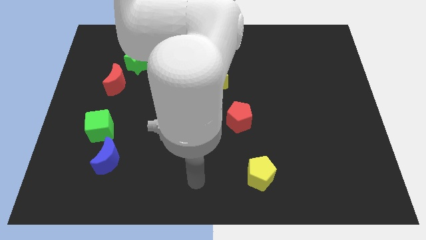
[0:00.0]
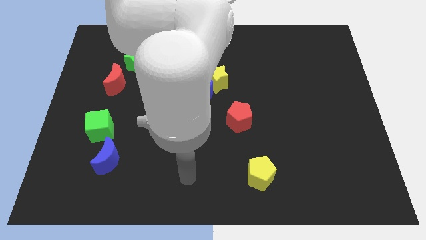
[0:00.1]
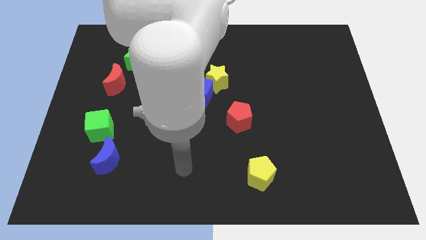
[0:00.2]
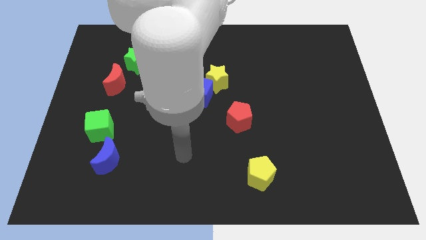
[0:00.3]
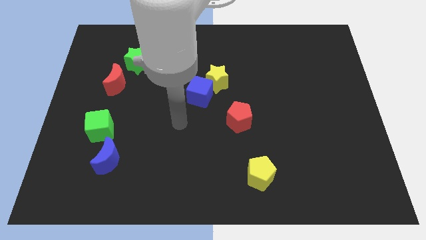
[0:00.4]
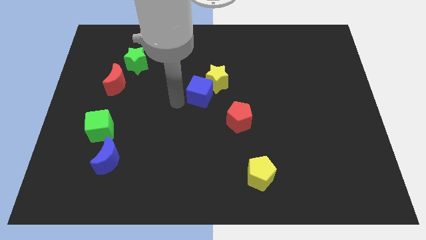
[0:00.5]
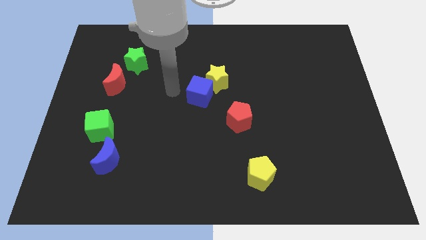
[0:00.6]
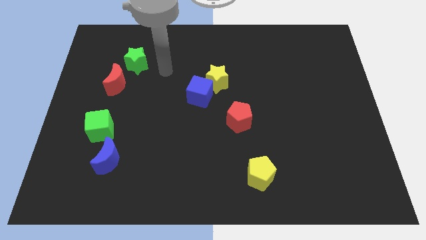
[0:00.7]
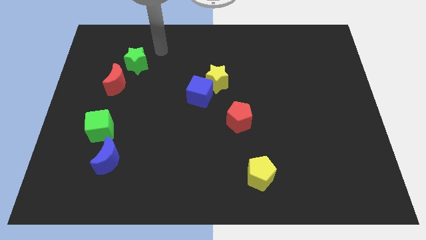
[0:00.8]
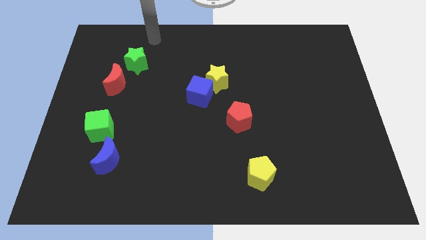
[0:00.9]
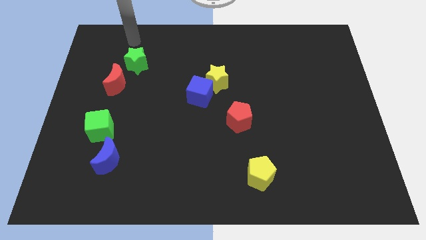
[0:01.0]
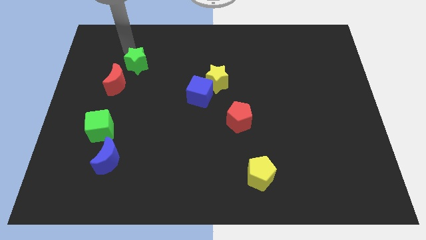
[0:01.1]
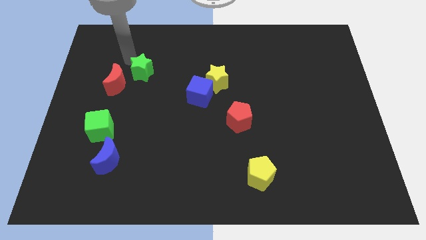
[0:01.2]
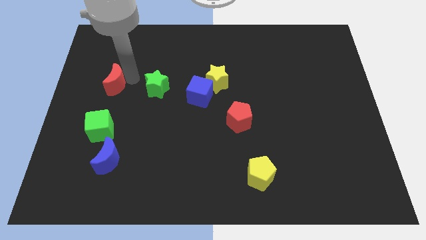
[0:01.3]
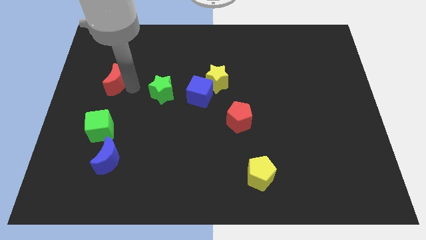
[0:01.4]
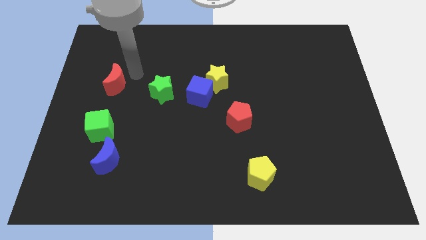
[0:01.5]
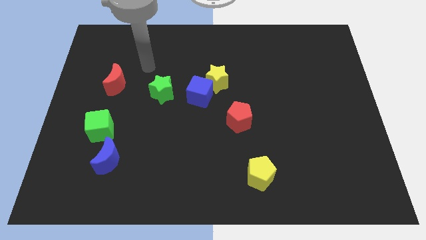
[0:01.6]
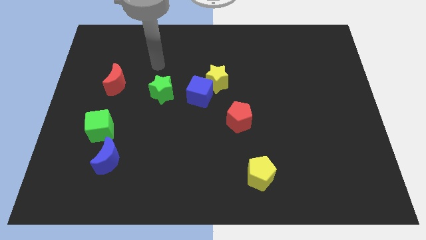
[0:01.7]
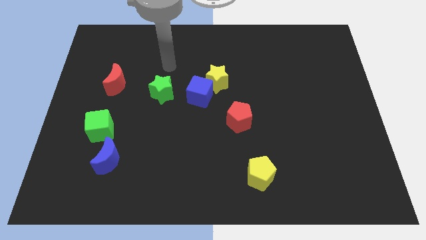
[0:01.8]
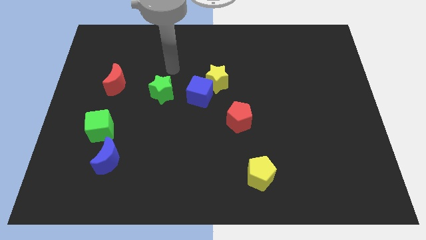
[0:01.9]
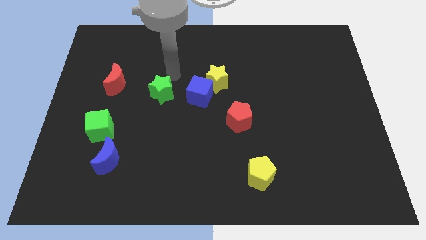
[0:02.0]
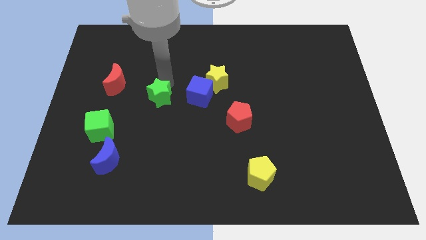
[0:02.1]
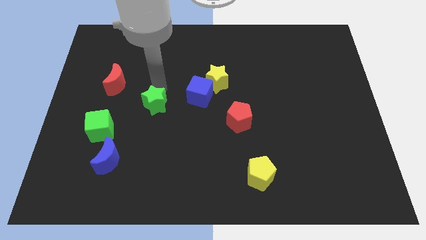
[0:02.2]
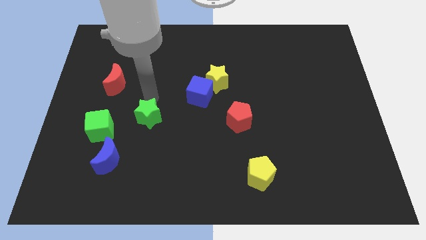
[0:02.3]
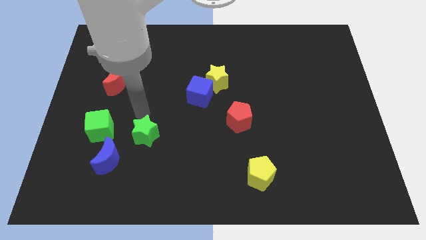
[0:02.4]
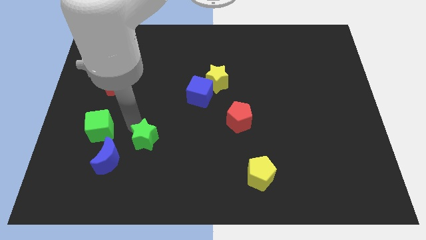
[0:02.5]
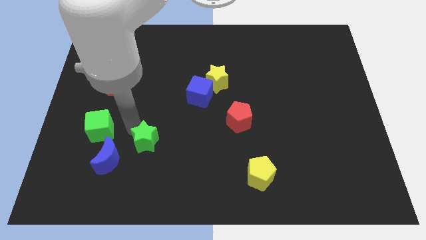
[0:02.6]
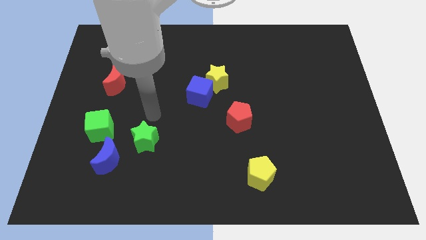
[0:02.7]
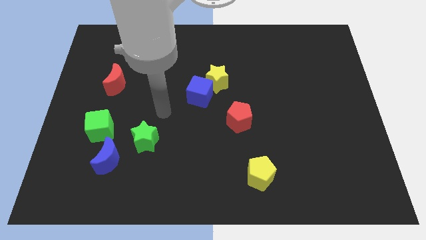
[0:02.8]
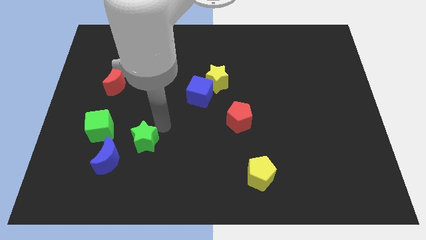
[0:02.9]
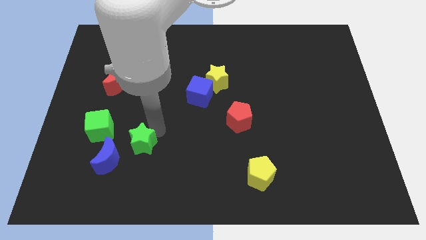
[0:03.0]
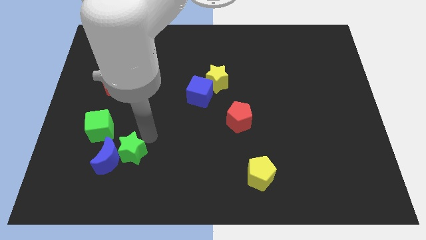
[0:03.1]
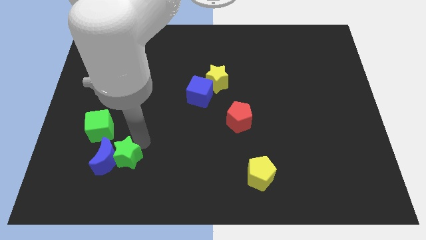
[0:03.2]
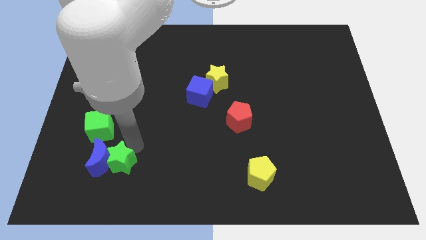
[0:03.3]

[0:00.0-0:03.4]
put the green star close to the blue moon

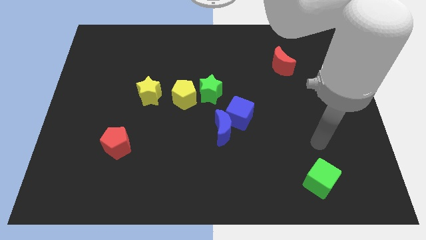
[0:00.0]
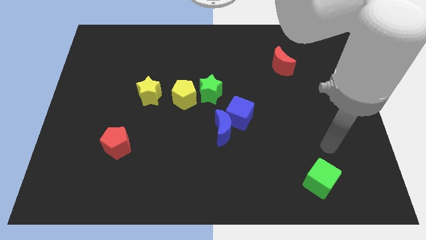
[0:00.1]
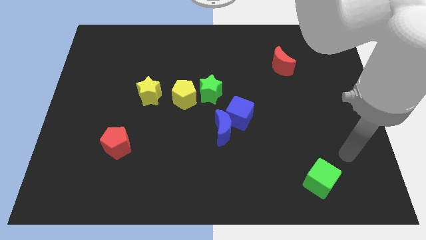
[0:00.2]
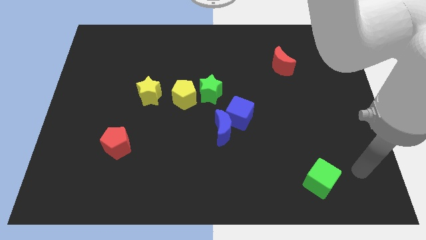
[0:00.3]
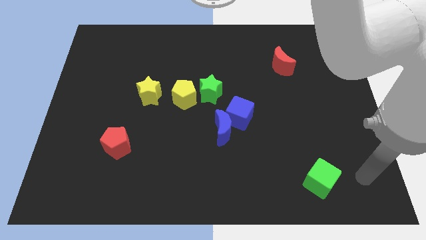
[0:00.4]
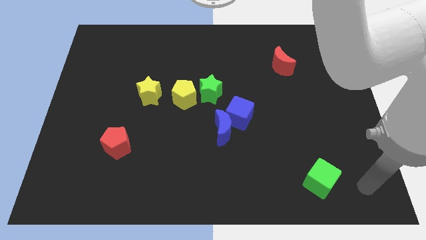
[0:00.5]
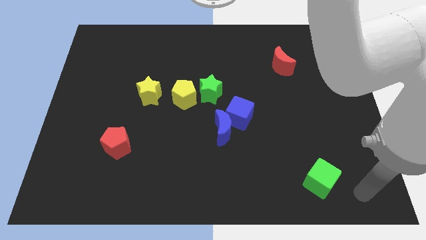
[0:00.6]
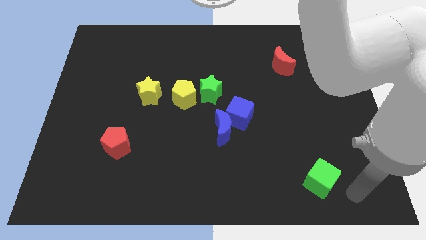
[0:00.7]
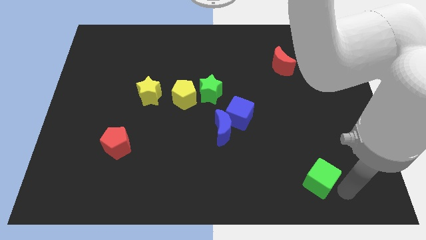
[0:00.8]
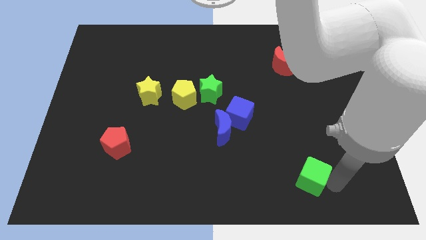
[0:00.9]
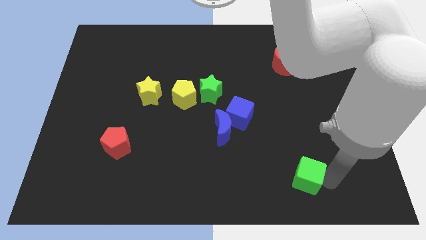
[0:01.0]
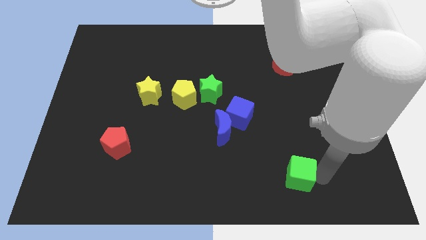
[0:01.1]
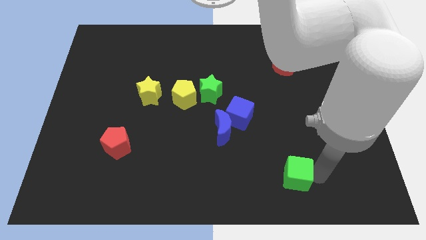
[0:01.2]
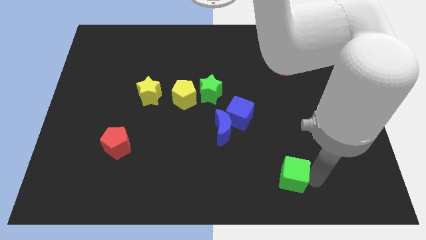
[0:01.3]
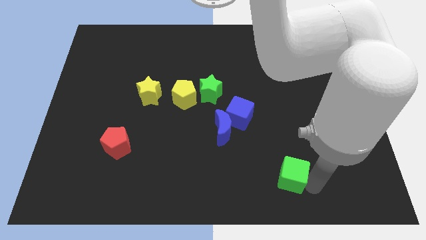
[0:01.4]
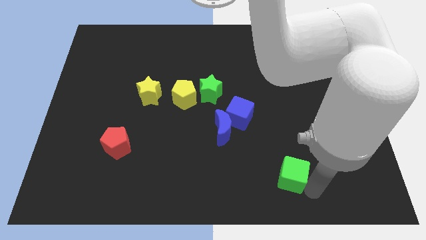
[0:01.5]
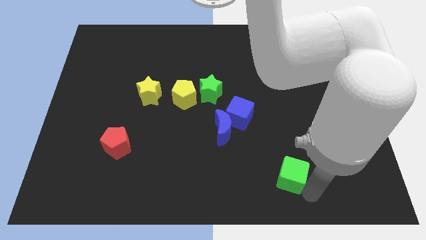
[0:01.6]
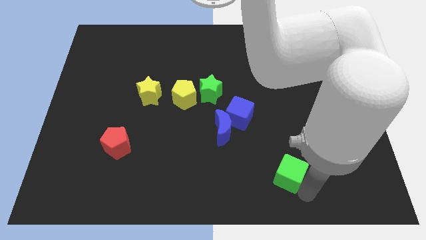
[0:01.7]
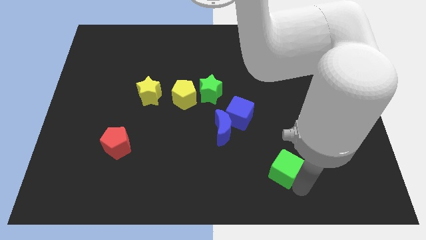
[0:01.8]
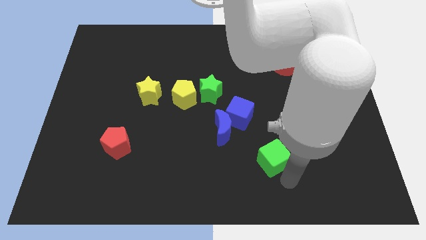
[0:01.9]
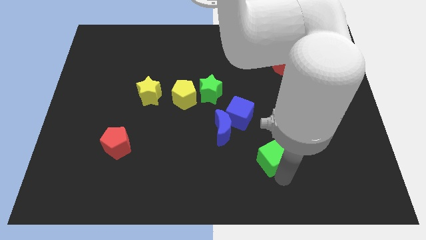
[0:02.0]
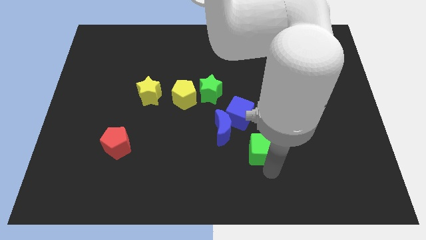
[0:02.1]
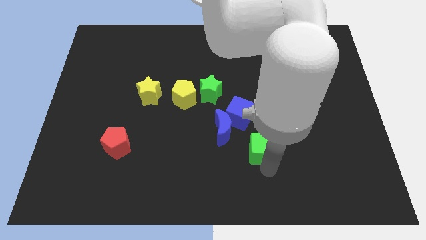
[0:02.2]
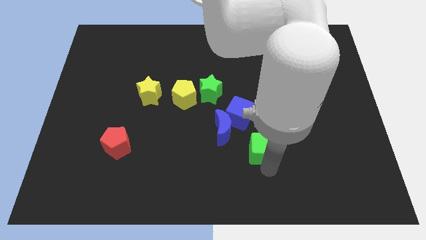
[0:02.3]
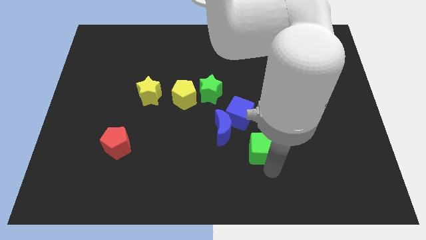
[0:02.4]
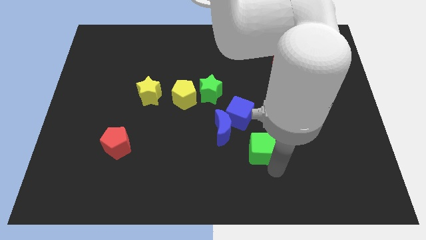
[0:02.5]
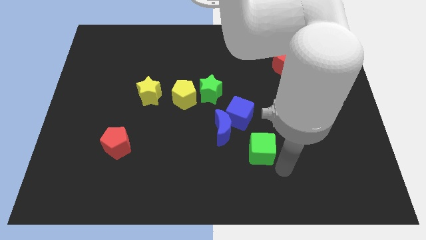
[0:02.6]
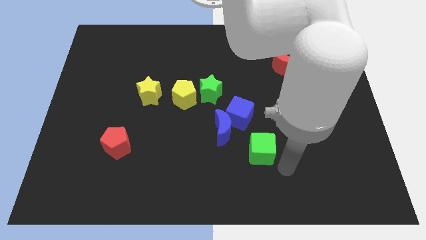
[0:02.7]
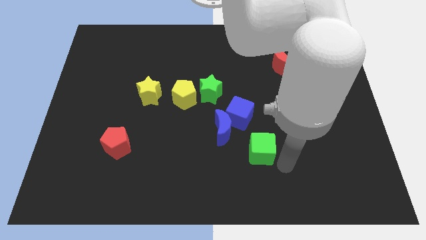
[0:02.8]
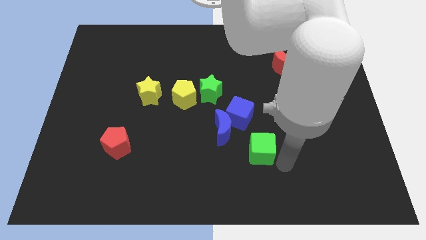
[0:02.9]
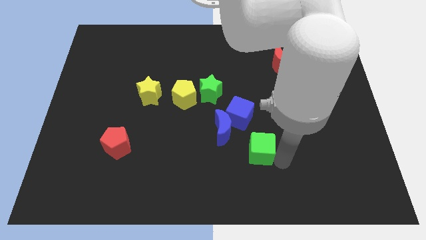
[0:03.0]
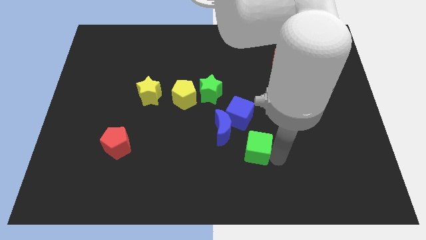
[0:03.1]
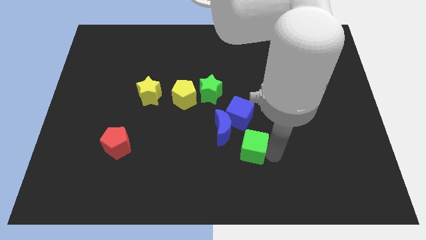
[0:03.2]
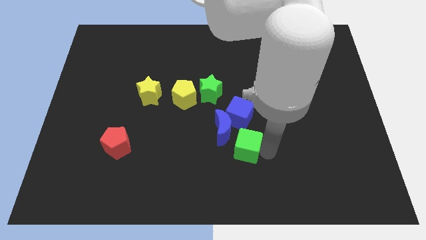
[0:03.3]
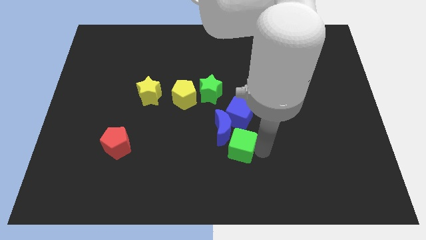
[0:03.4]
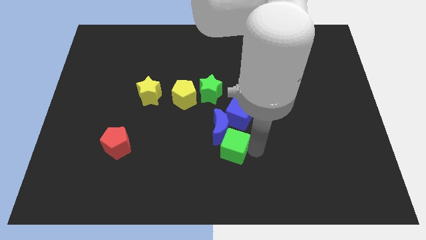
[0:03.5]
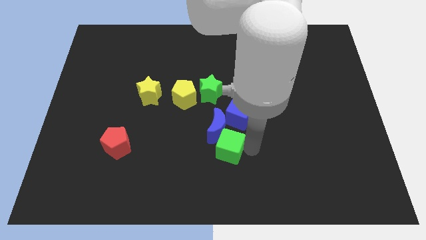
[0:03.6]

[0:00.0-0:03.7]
slide the green cube next to the blue moon

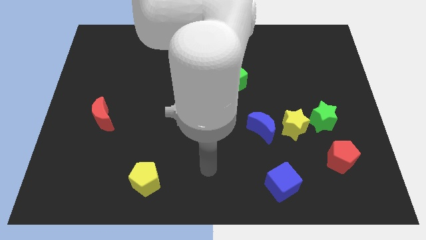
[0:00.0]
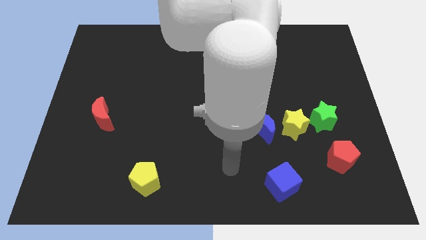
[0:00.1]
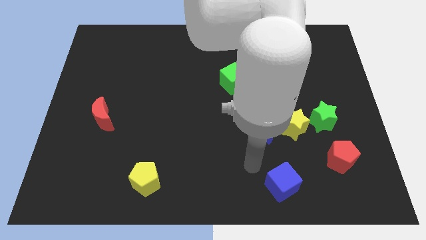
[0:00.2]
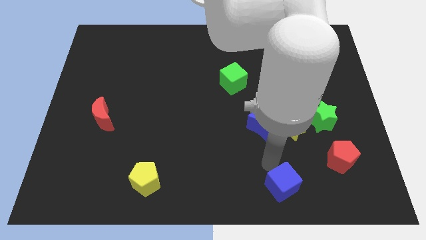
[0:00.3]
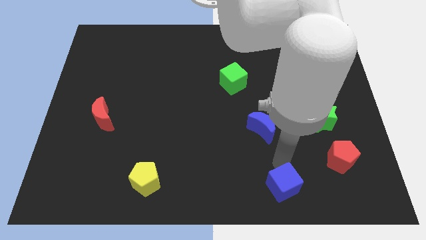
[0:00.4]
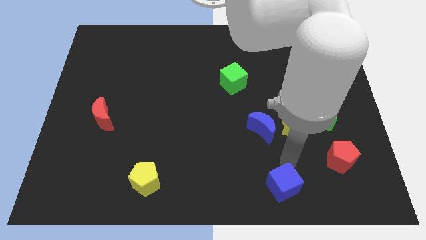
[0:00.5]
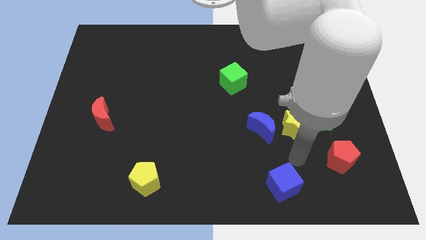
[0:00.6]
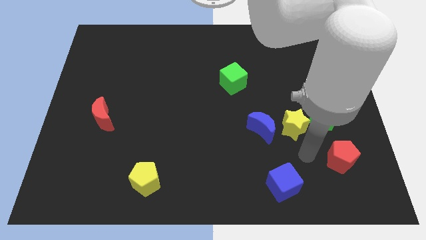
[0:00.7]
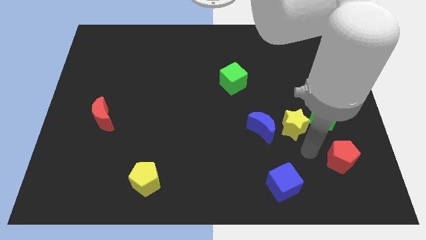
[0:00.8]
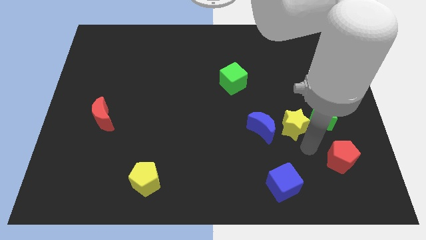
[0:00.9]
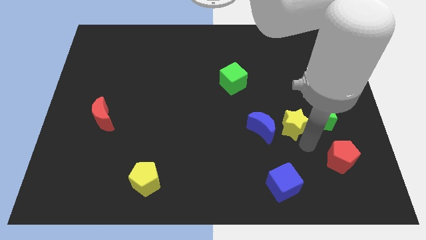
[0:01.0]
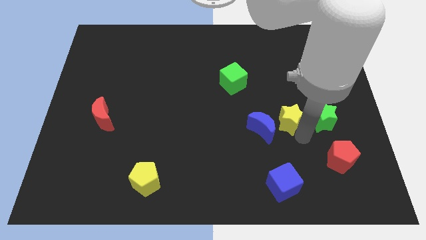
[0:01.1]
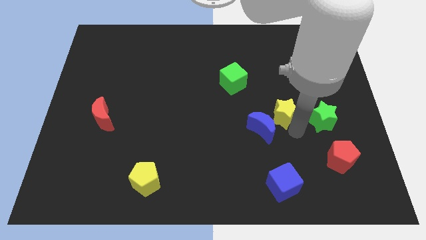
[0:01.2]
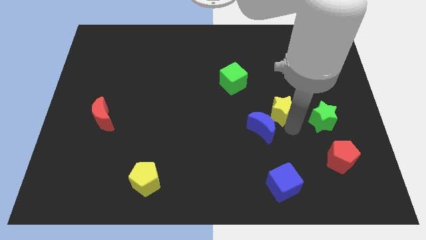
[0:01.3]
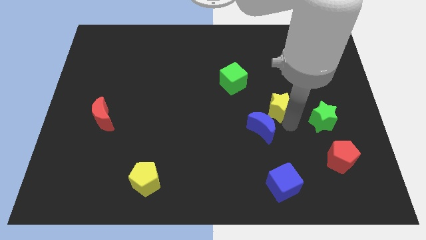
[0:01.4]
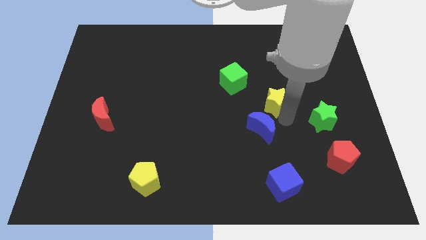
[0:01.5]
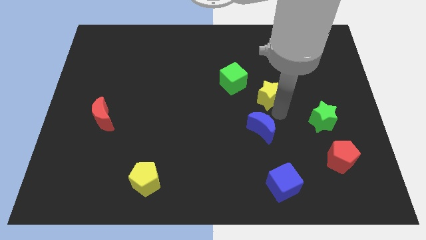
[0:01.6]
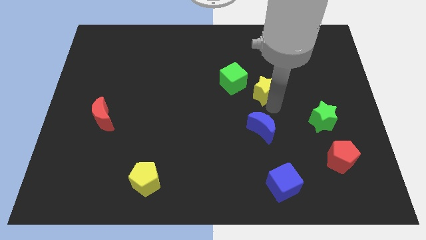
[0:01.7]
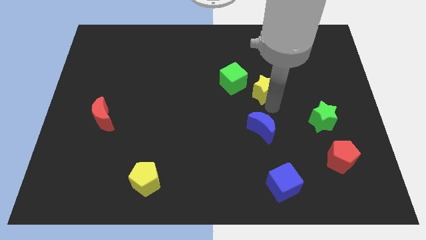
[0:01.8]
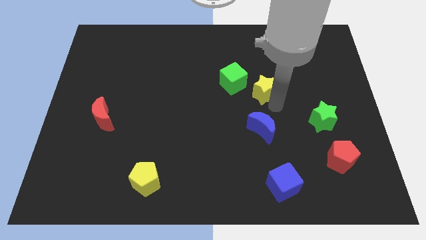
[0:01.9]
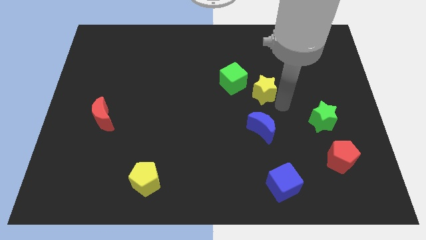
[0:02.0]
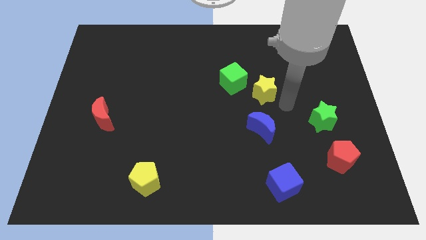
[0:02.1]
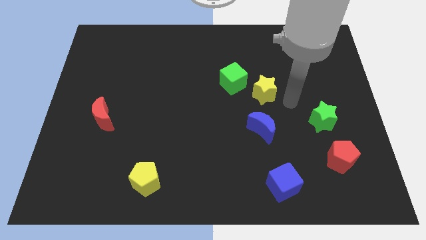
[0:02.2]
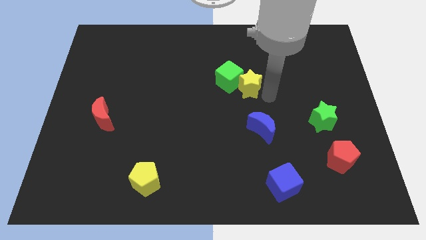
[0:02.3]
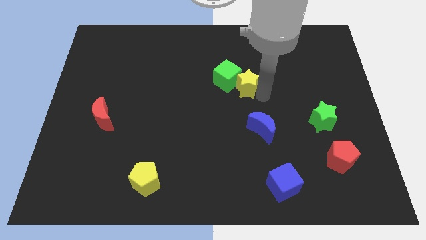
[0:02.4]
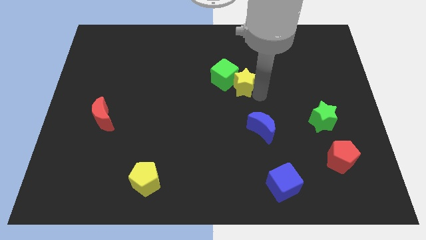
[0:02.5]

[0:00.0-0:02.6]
move the yellow star close to the green cube
